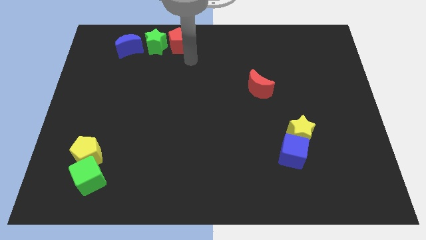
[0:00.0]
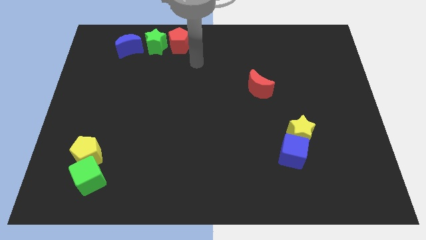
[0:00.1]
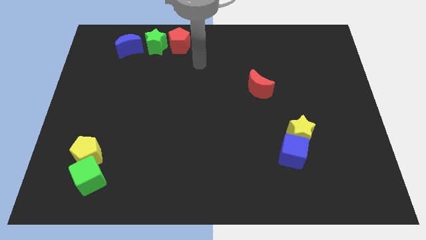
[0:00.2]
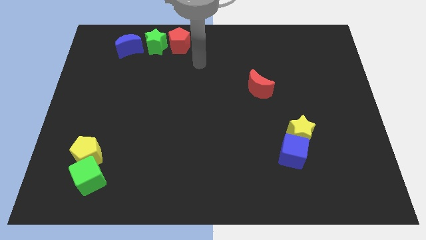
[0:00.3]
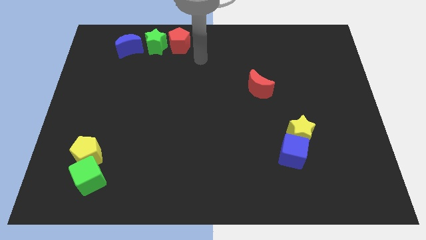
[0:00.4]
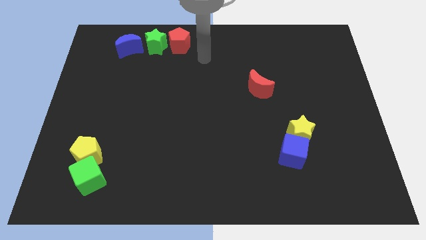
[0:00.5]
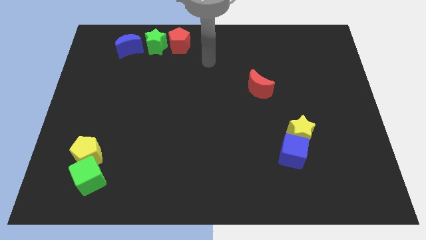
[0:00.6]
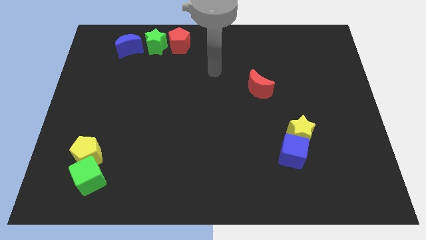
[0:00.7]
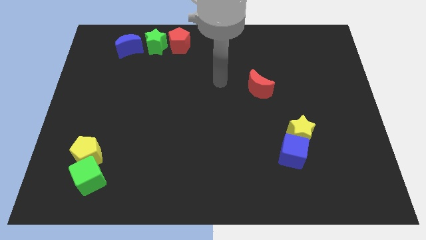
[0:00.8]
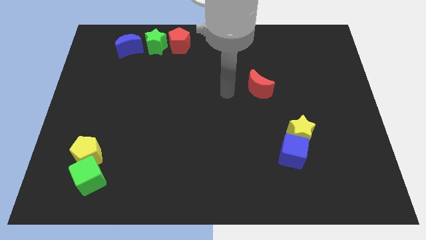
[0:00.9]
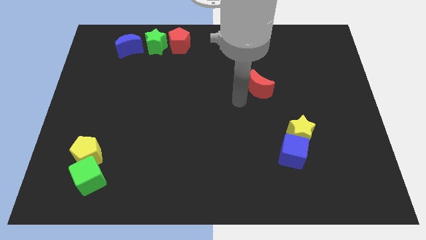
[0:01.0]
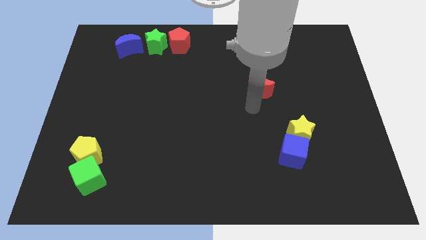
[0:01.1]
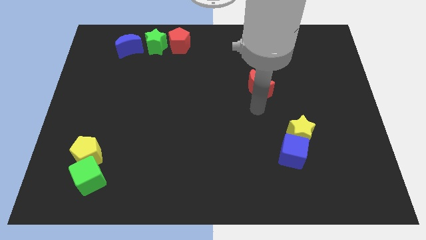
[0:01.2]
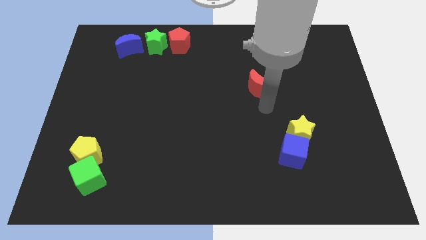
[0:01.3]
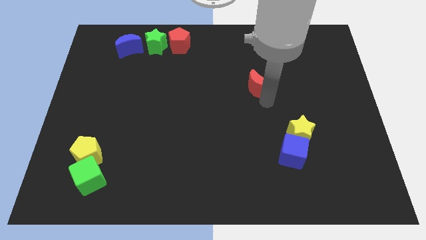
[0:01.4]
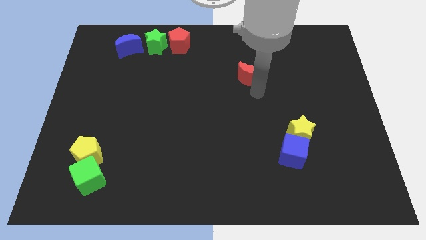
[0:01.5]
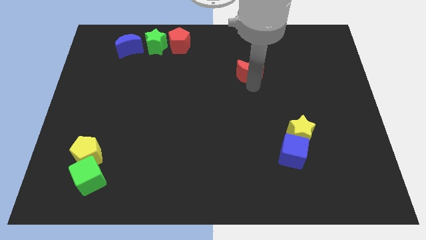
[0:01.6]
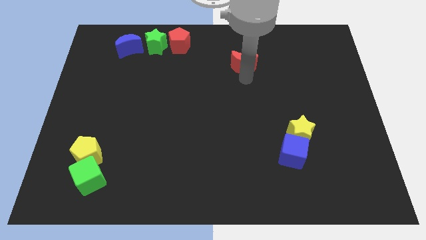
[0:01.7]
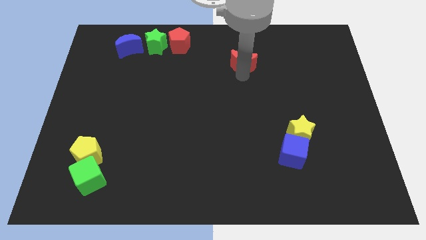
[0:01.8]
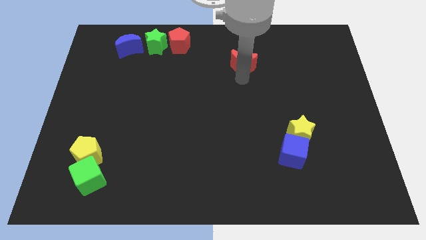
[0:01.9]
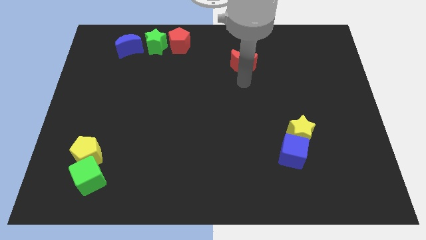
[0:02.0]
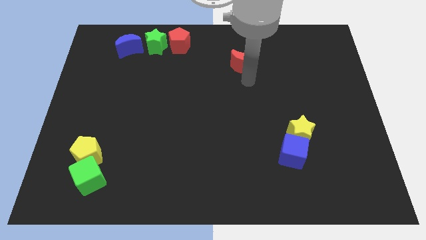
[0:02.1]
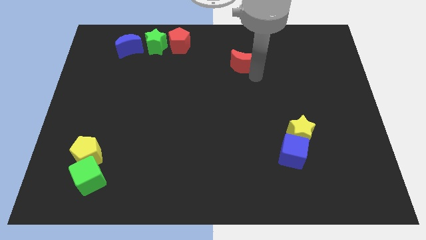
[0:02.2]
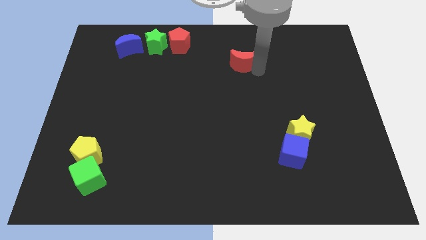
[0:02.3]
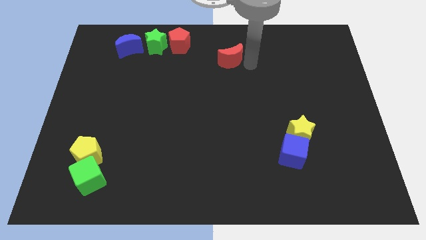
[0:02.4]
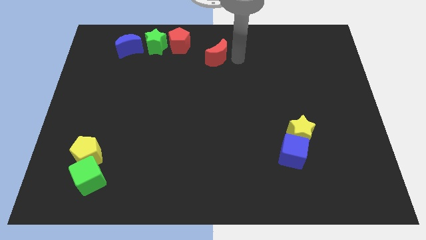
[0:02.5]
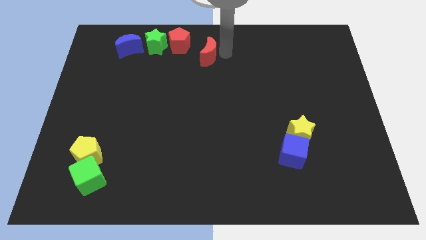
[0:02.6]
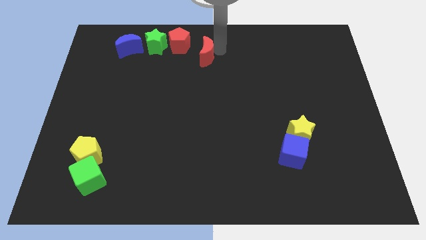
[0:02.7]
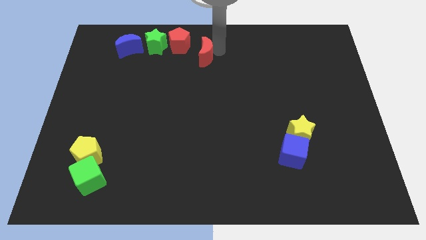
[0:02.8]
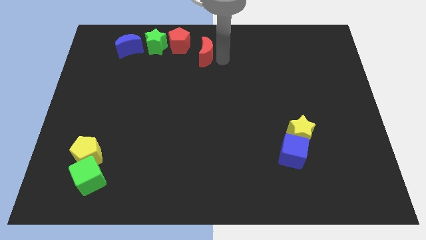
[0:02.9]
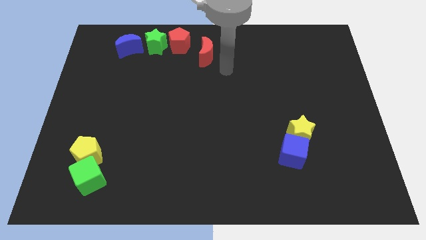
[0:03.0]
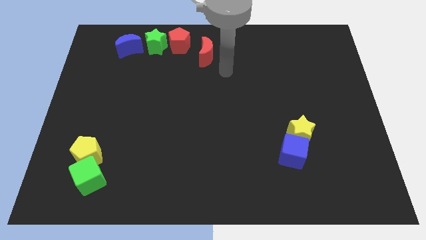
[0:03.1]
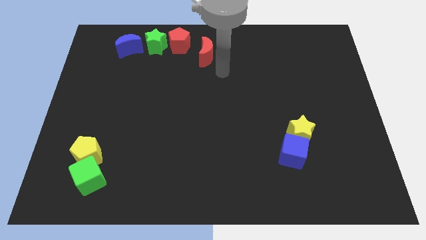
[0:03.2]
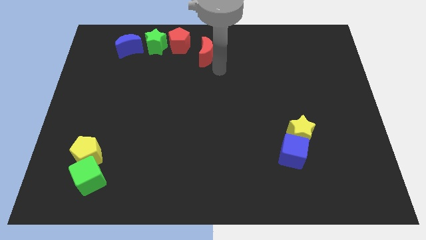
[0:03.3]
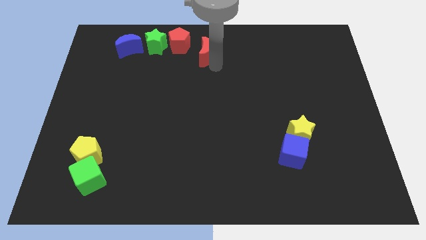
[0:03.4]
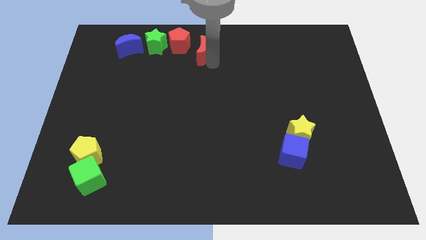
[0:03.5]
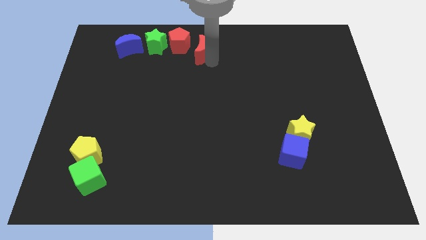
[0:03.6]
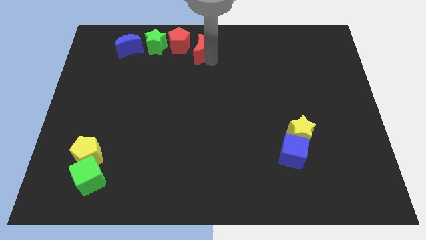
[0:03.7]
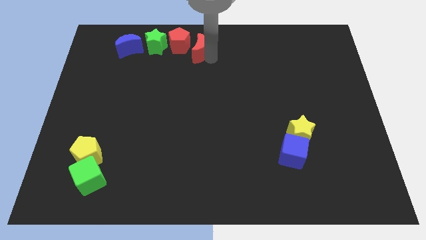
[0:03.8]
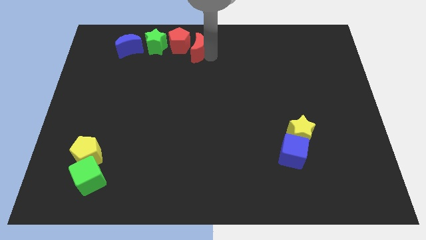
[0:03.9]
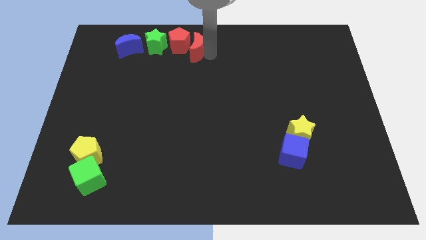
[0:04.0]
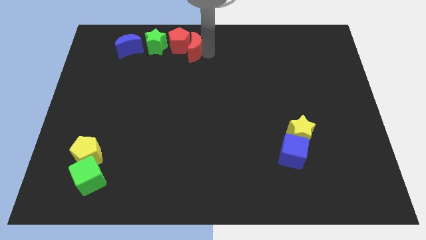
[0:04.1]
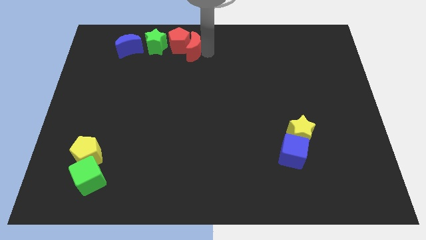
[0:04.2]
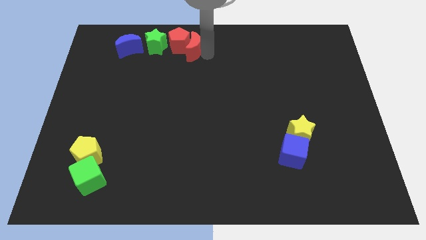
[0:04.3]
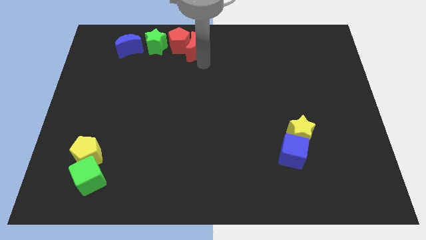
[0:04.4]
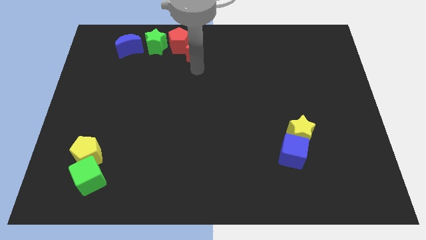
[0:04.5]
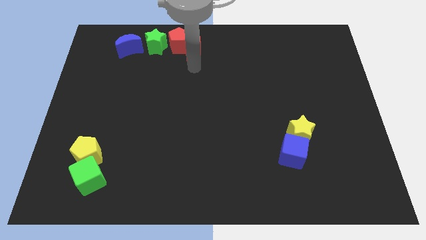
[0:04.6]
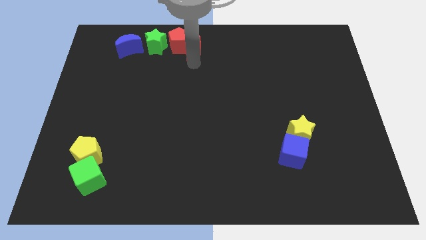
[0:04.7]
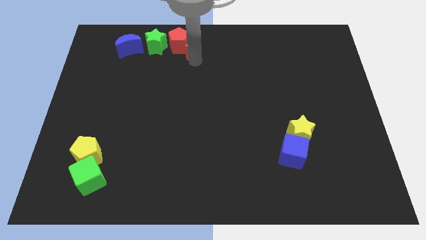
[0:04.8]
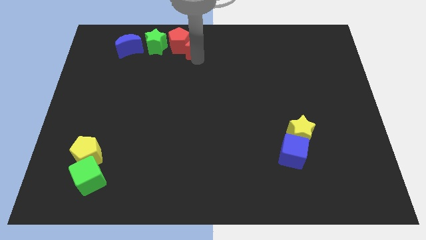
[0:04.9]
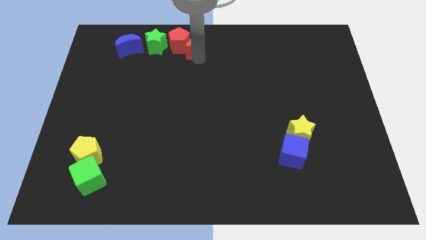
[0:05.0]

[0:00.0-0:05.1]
slide the red moon into the right side of the red pentagon

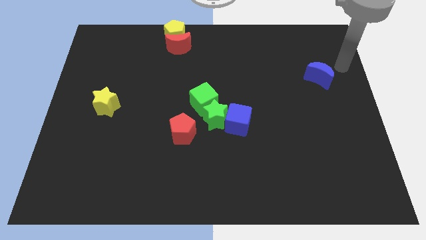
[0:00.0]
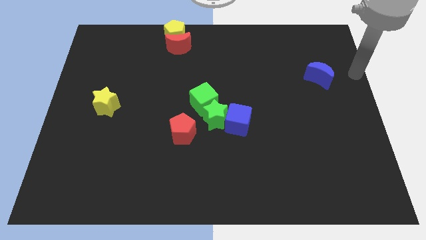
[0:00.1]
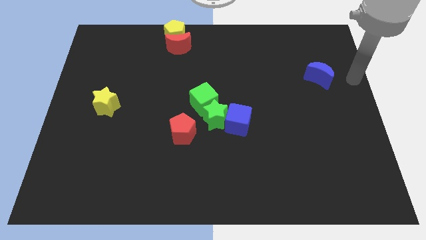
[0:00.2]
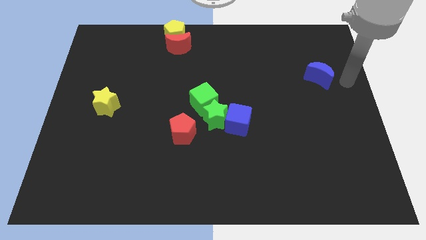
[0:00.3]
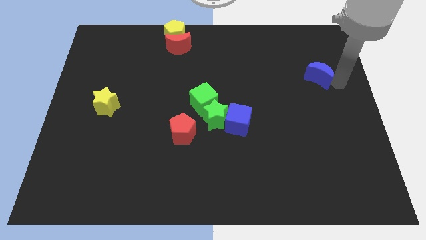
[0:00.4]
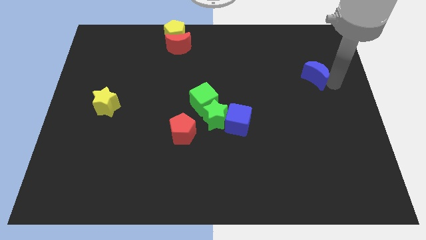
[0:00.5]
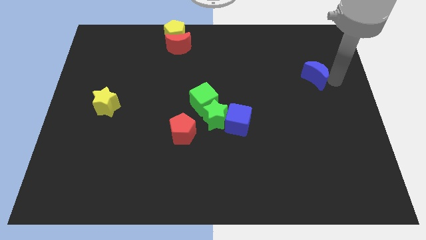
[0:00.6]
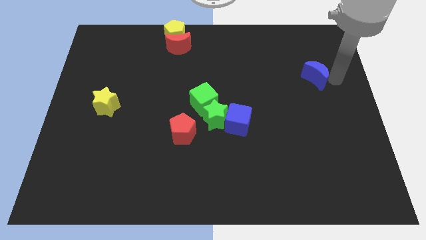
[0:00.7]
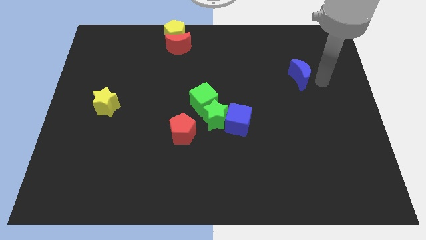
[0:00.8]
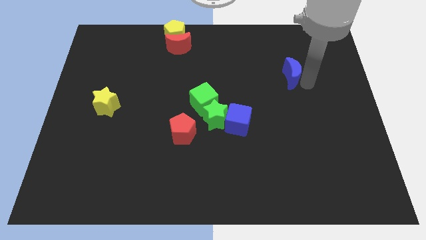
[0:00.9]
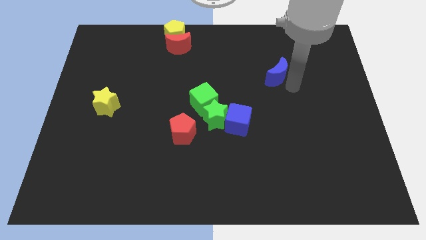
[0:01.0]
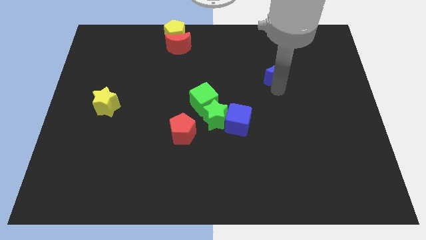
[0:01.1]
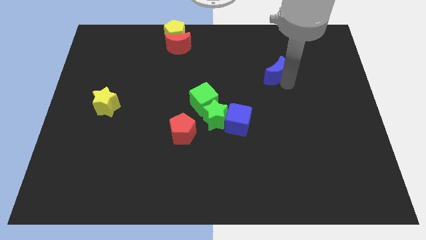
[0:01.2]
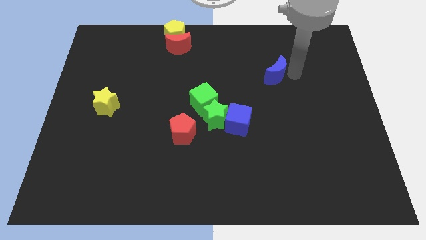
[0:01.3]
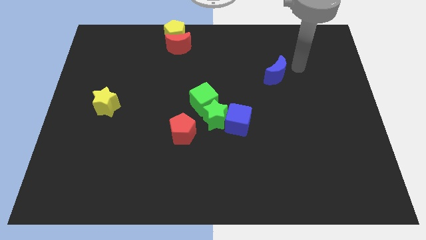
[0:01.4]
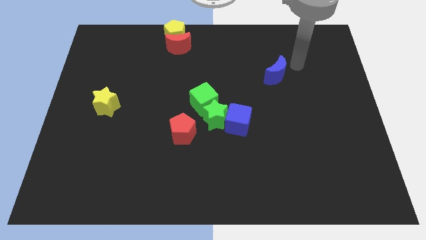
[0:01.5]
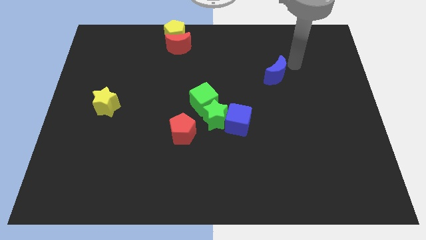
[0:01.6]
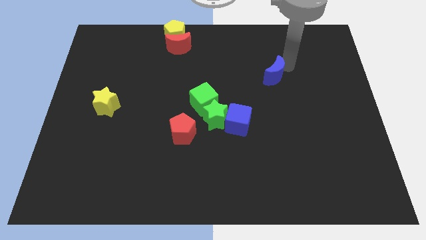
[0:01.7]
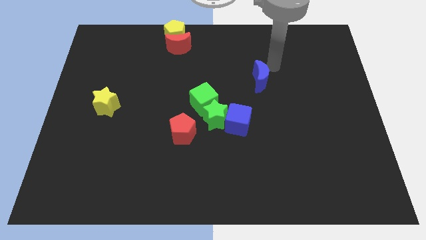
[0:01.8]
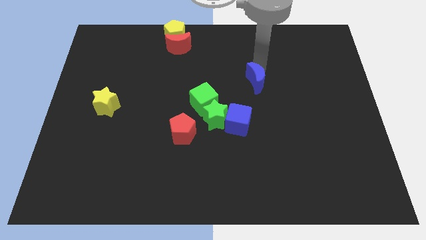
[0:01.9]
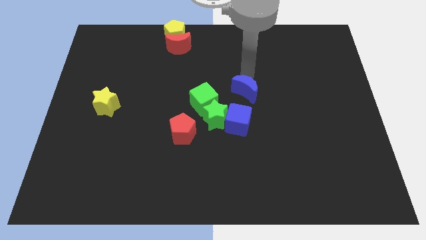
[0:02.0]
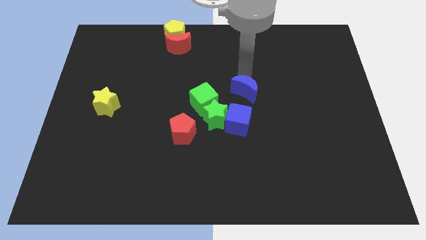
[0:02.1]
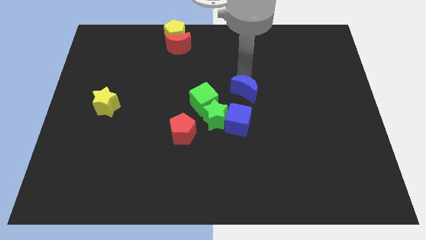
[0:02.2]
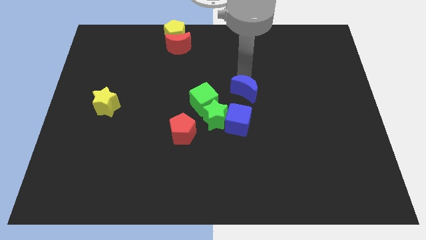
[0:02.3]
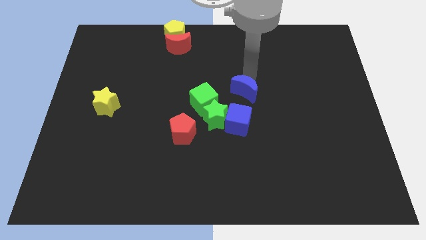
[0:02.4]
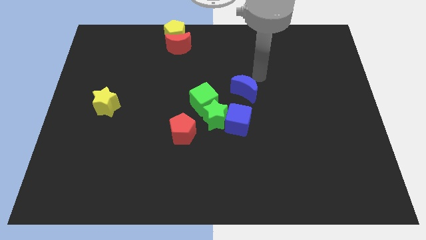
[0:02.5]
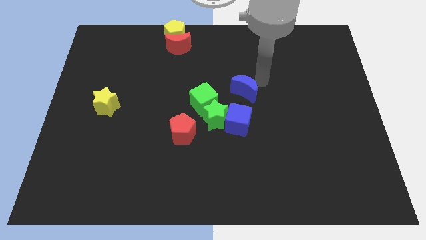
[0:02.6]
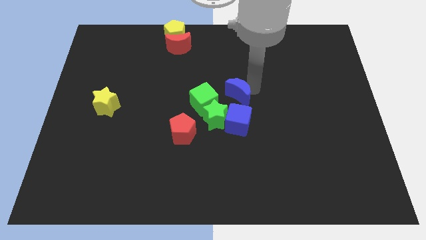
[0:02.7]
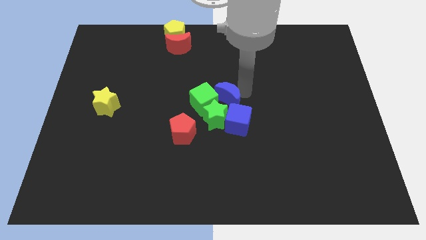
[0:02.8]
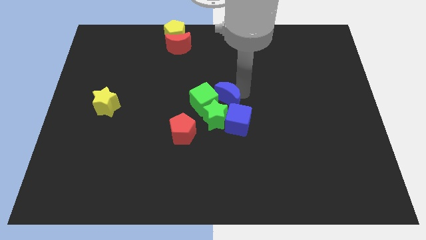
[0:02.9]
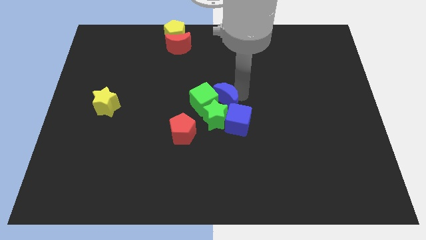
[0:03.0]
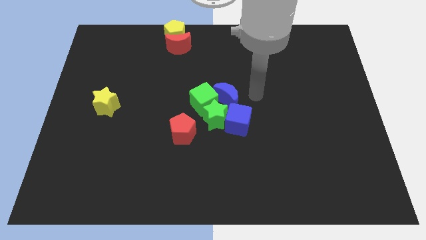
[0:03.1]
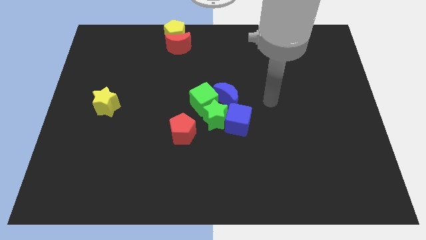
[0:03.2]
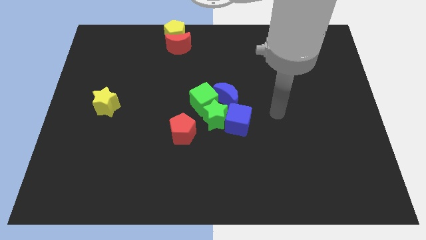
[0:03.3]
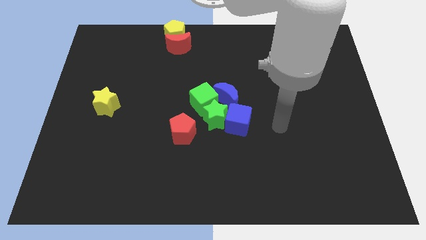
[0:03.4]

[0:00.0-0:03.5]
push the blue crescent towards center

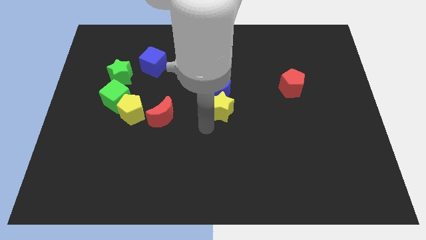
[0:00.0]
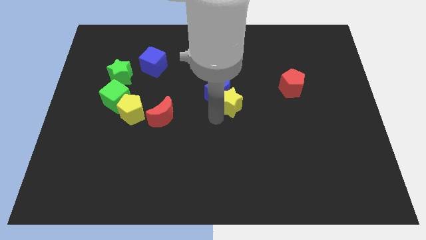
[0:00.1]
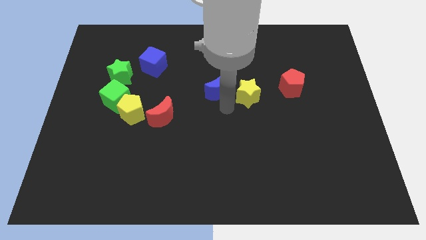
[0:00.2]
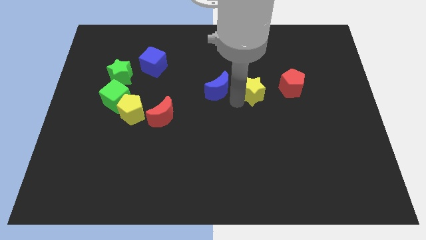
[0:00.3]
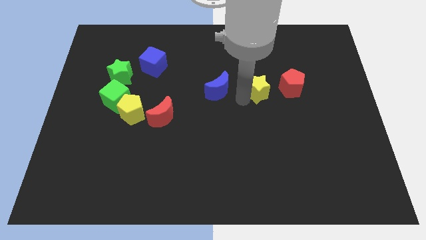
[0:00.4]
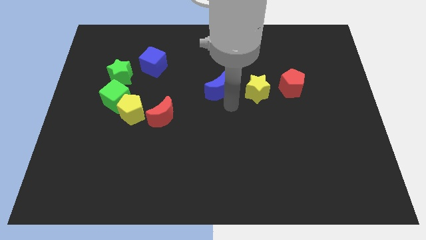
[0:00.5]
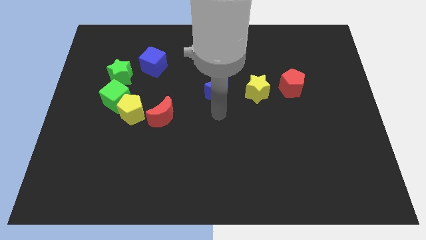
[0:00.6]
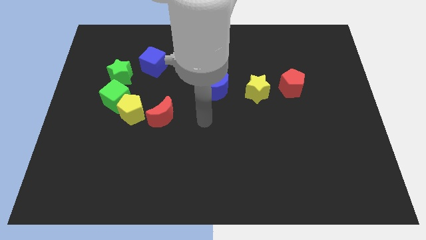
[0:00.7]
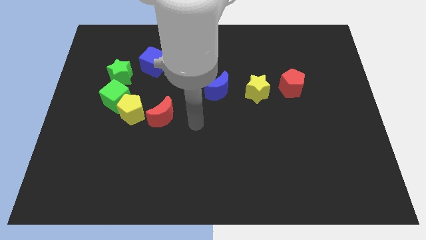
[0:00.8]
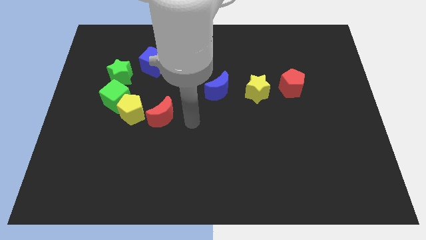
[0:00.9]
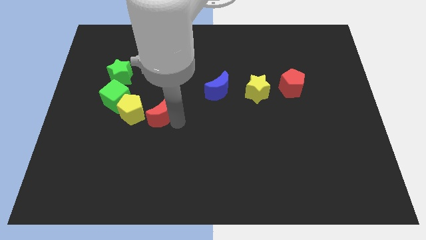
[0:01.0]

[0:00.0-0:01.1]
push the yellow star to the right of blue moon
